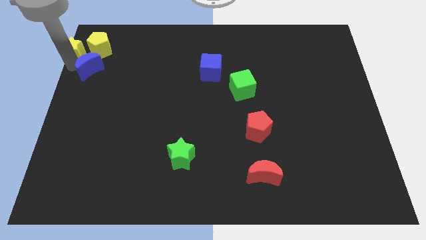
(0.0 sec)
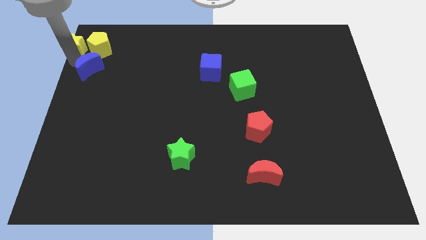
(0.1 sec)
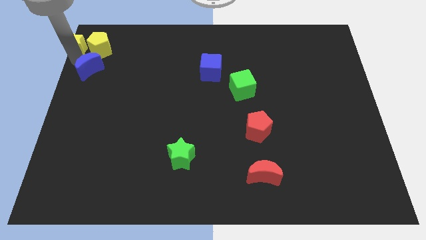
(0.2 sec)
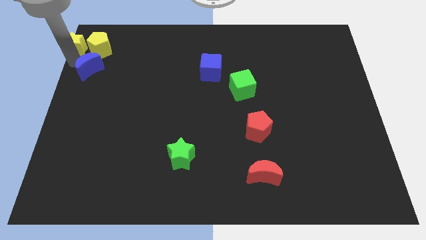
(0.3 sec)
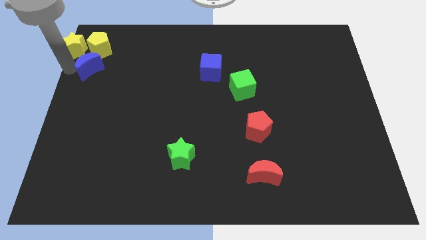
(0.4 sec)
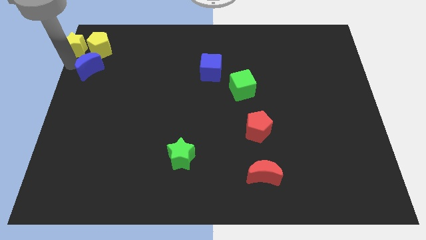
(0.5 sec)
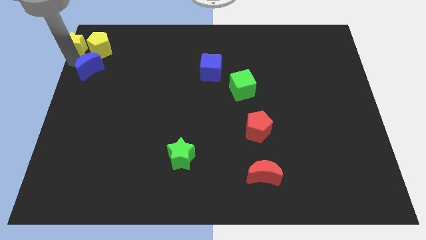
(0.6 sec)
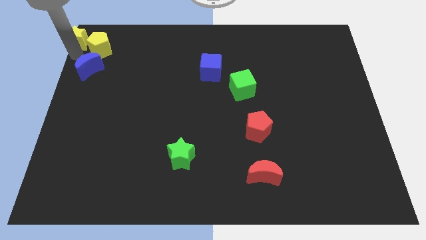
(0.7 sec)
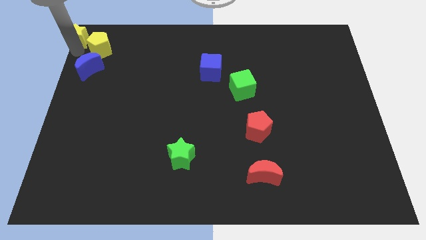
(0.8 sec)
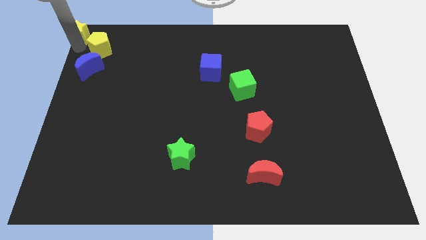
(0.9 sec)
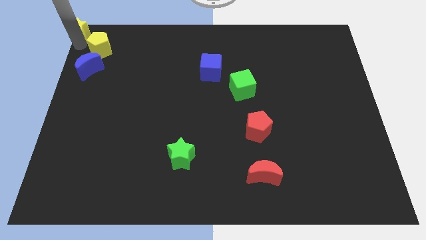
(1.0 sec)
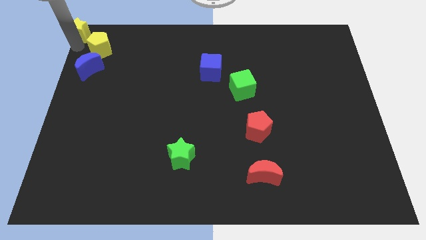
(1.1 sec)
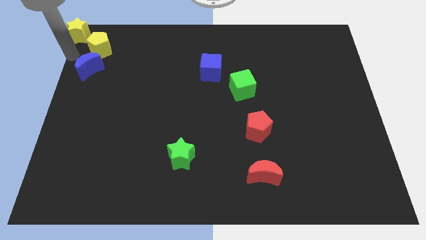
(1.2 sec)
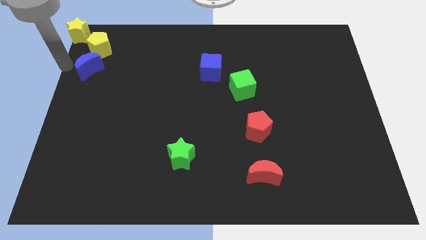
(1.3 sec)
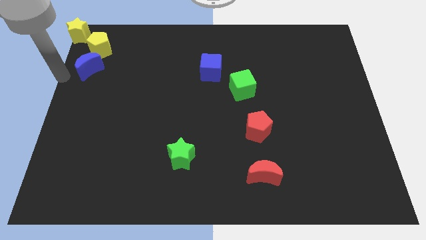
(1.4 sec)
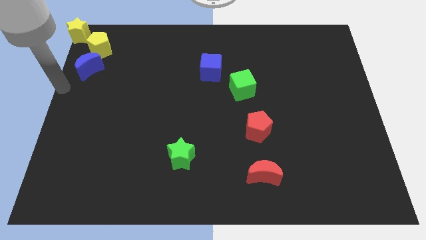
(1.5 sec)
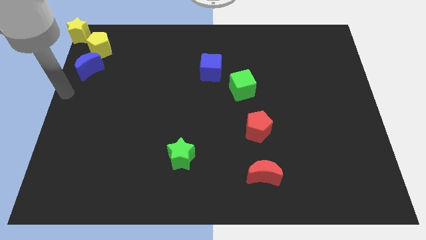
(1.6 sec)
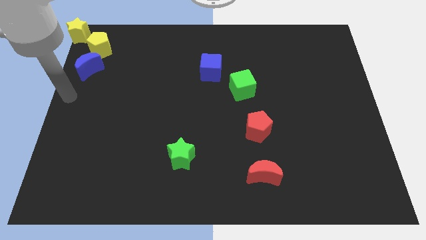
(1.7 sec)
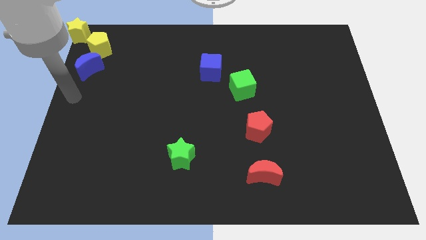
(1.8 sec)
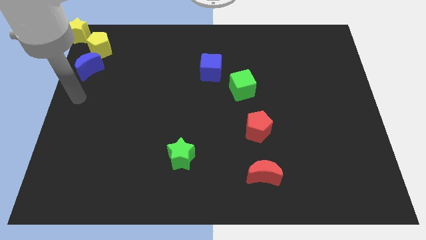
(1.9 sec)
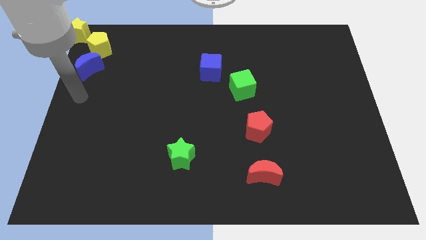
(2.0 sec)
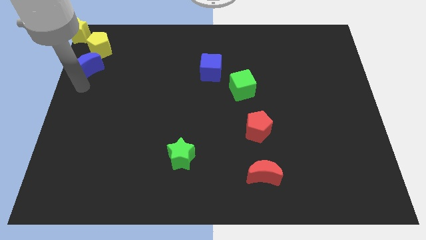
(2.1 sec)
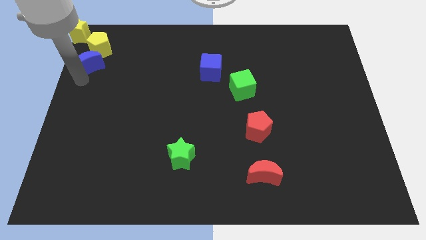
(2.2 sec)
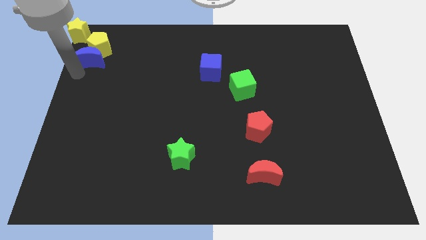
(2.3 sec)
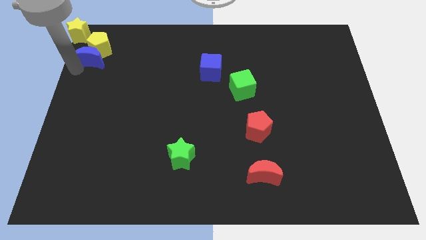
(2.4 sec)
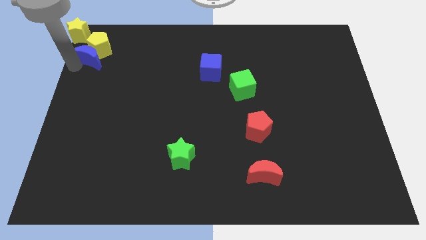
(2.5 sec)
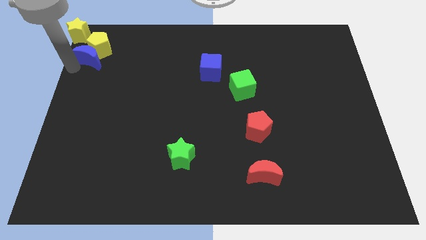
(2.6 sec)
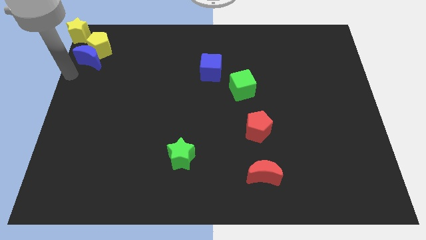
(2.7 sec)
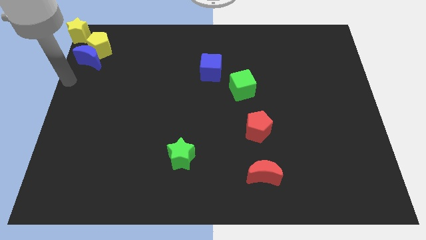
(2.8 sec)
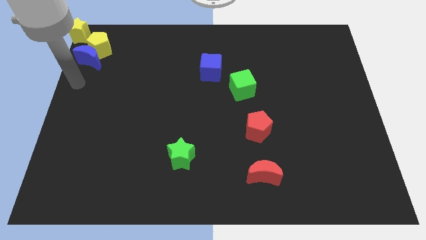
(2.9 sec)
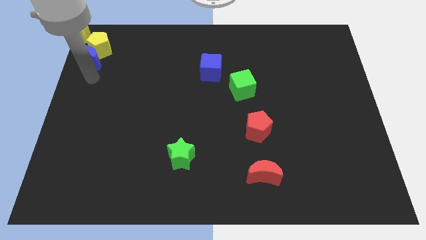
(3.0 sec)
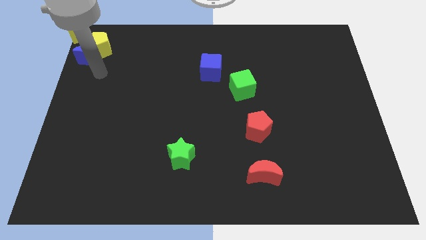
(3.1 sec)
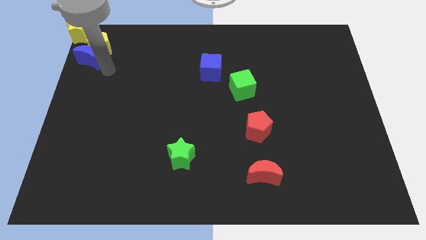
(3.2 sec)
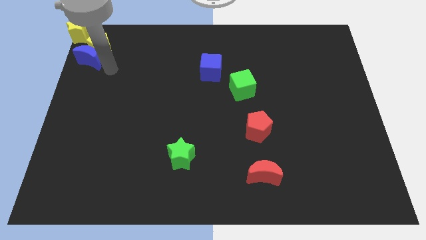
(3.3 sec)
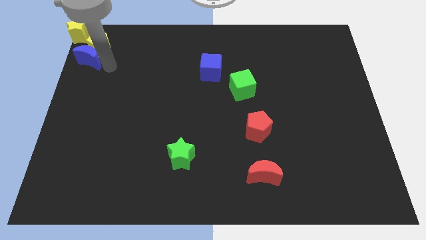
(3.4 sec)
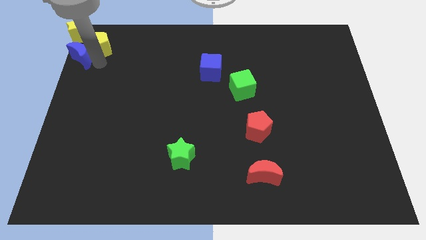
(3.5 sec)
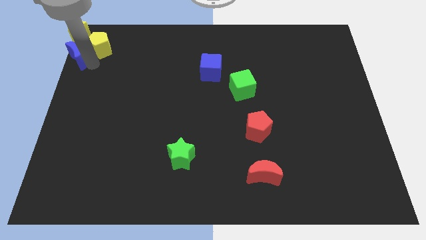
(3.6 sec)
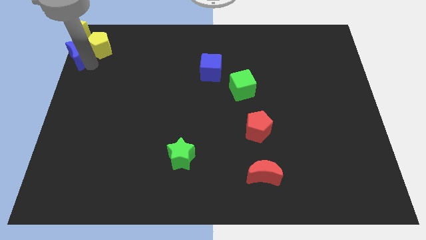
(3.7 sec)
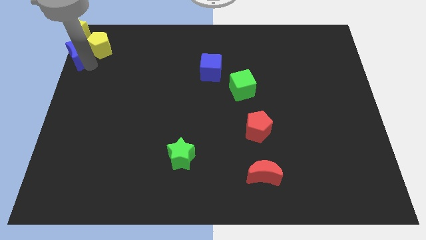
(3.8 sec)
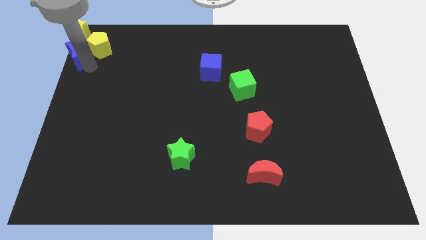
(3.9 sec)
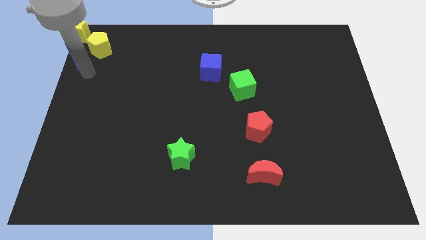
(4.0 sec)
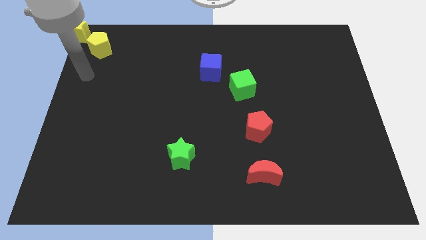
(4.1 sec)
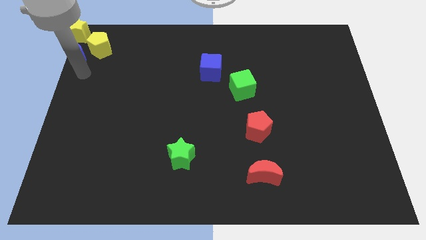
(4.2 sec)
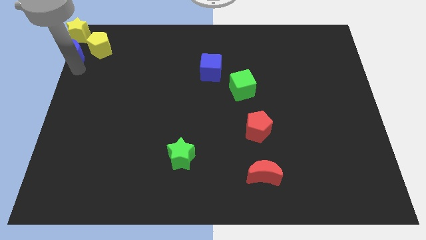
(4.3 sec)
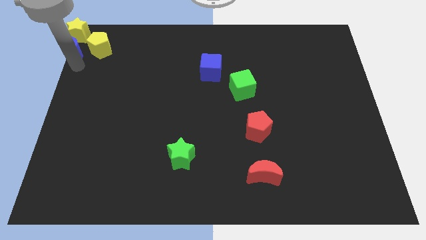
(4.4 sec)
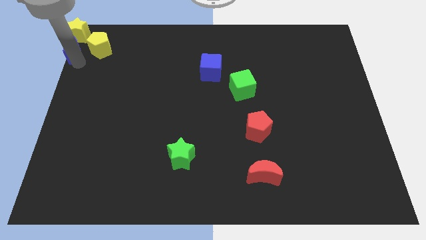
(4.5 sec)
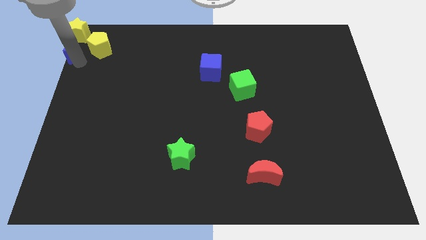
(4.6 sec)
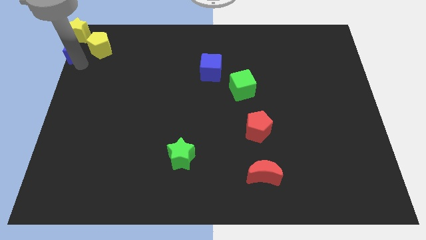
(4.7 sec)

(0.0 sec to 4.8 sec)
push the yellow star and blue crescent vertical to each other

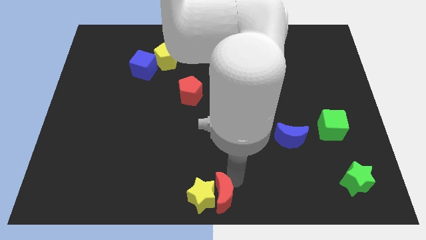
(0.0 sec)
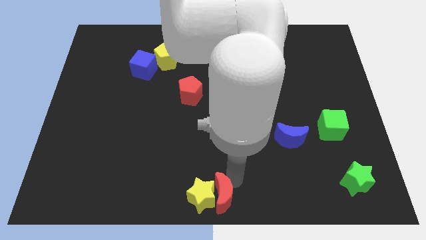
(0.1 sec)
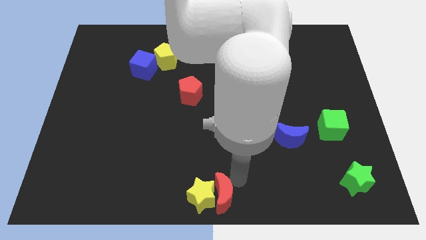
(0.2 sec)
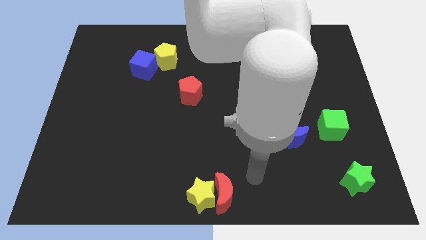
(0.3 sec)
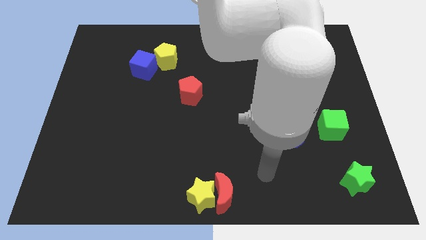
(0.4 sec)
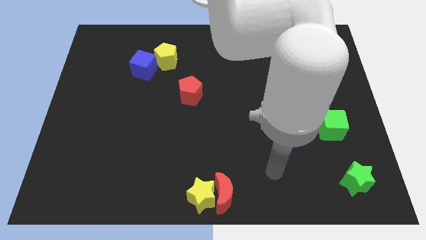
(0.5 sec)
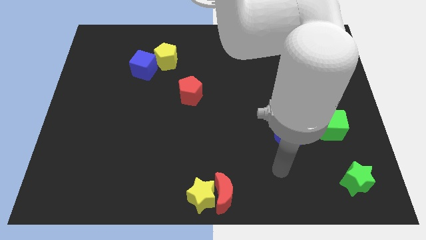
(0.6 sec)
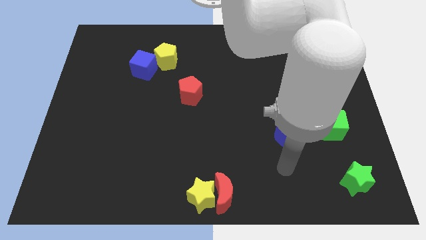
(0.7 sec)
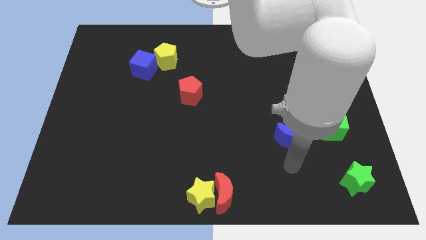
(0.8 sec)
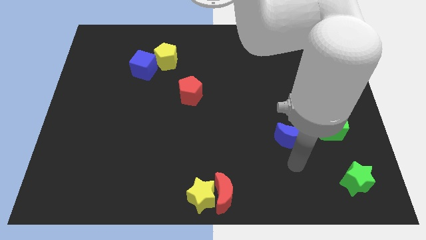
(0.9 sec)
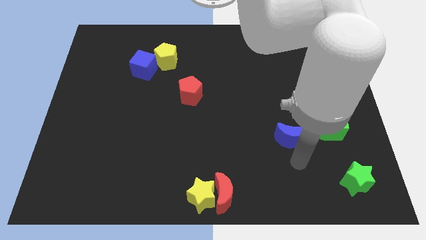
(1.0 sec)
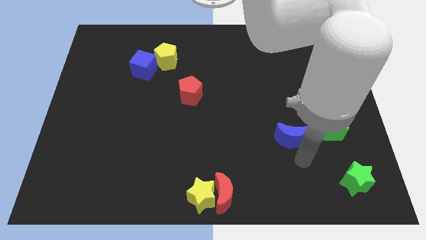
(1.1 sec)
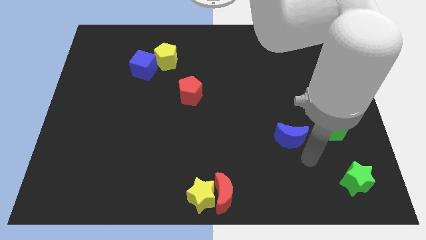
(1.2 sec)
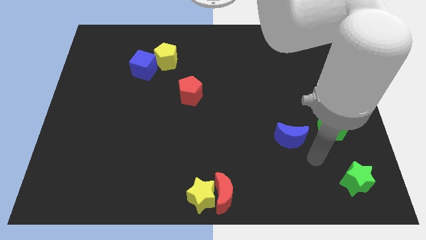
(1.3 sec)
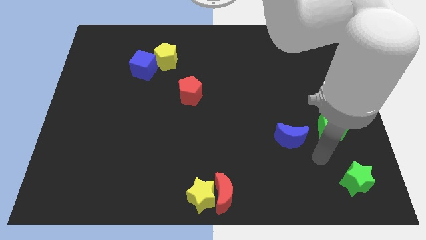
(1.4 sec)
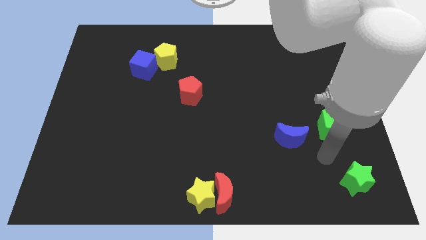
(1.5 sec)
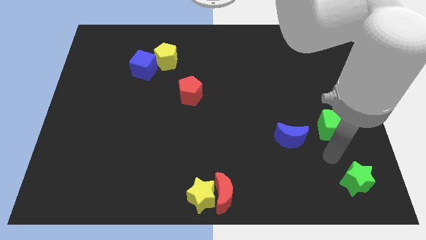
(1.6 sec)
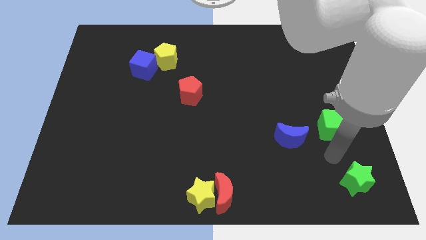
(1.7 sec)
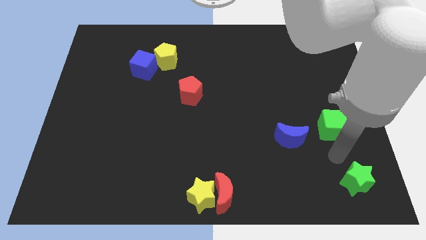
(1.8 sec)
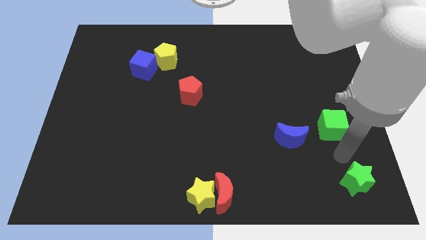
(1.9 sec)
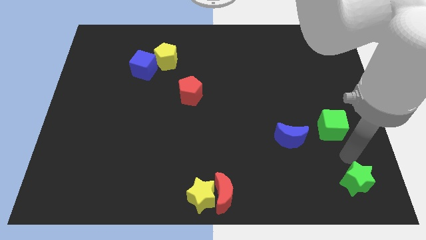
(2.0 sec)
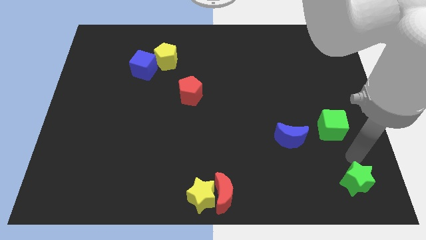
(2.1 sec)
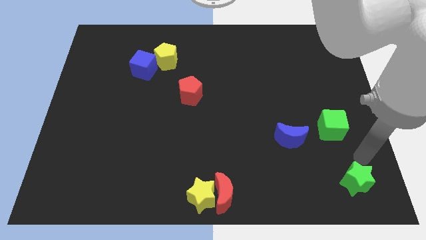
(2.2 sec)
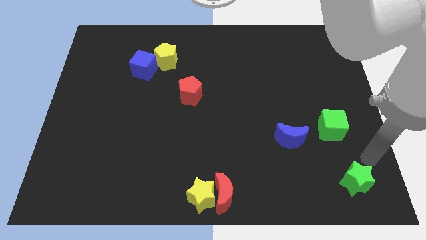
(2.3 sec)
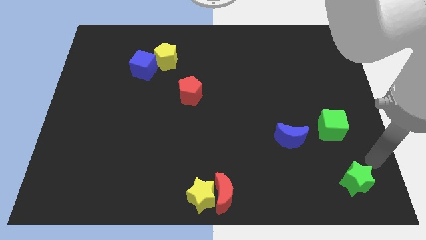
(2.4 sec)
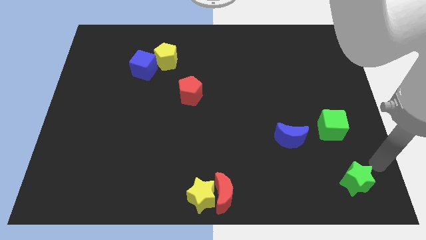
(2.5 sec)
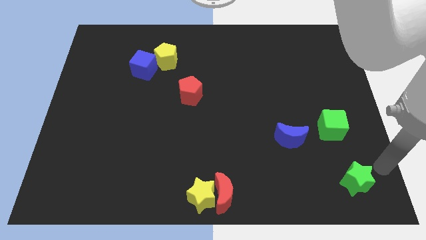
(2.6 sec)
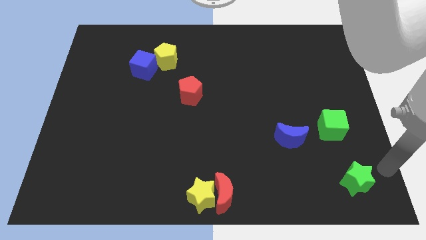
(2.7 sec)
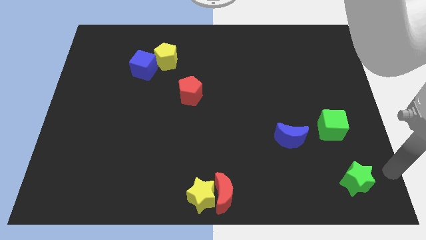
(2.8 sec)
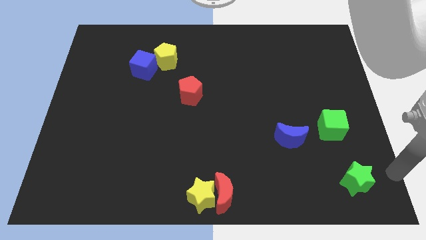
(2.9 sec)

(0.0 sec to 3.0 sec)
move the arm away from the red moon

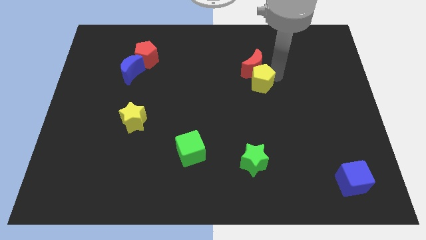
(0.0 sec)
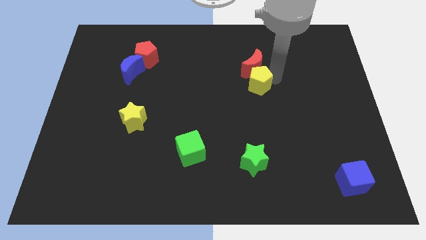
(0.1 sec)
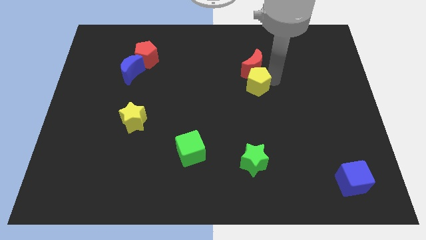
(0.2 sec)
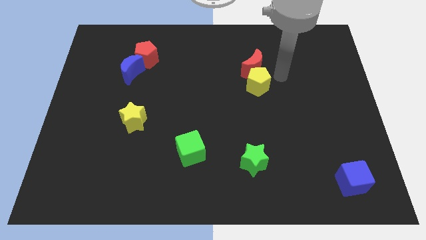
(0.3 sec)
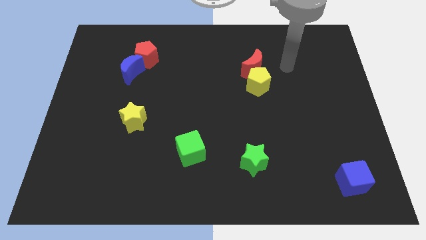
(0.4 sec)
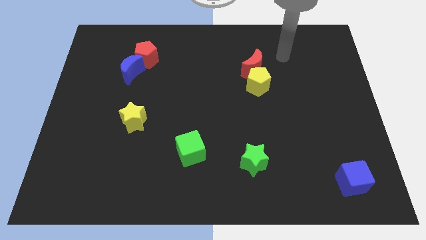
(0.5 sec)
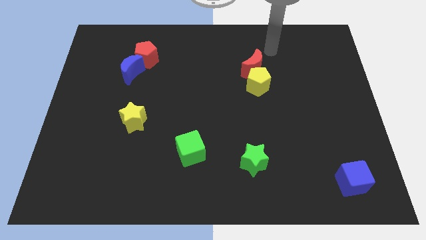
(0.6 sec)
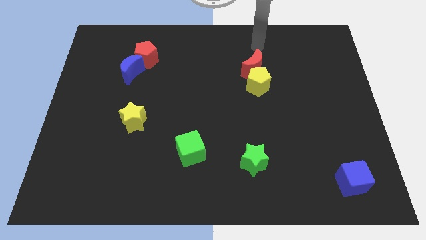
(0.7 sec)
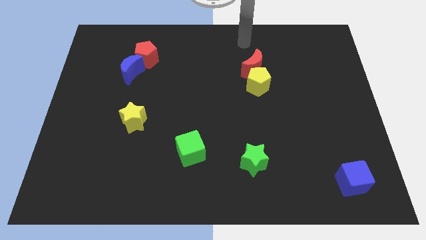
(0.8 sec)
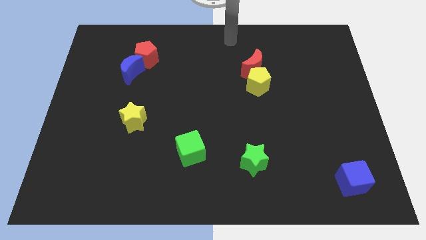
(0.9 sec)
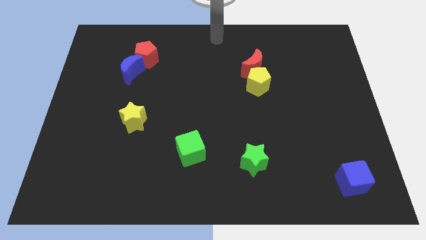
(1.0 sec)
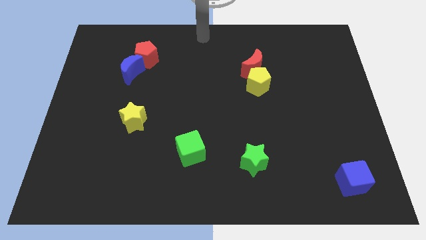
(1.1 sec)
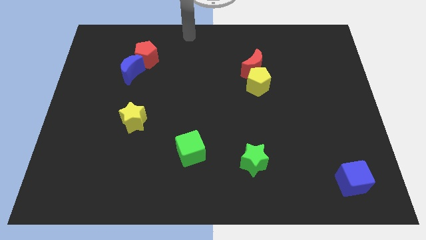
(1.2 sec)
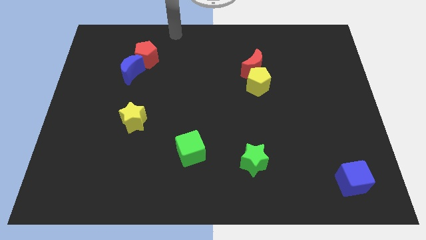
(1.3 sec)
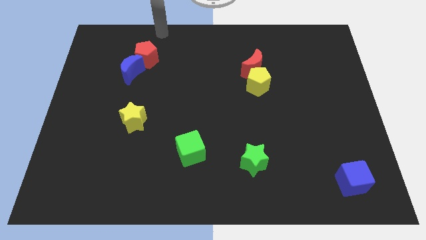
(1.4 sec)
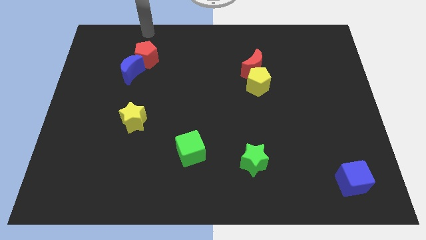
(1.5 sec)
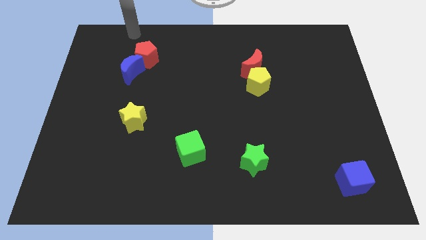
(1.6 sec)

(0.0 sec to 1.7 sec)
move your arm away from yellow pentagon
